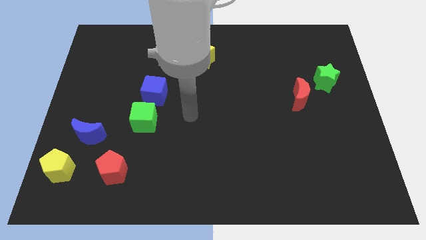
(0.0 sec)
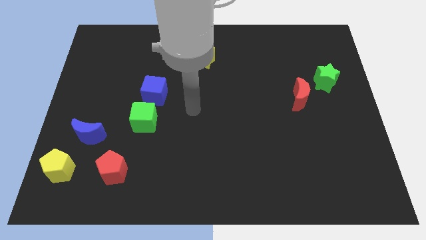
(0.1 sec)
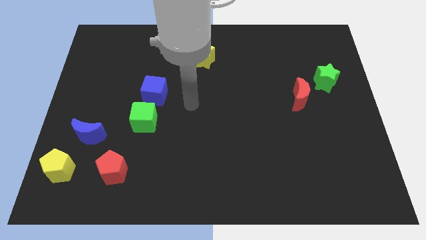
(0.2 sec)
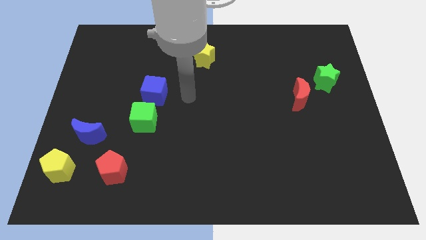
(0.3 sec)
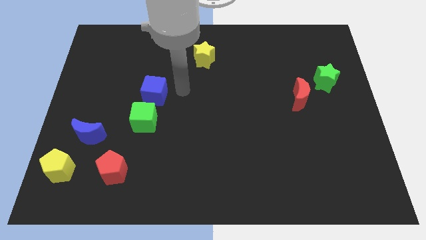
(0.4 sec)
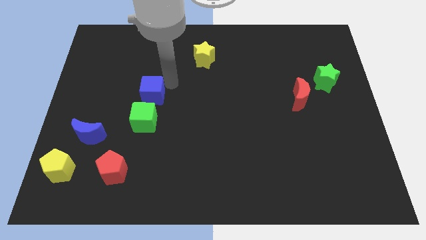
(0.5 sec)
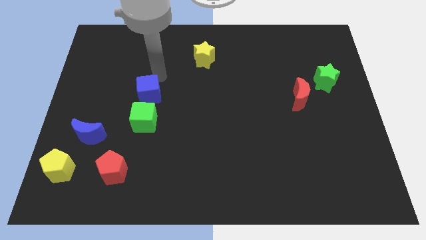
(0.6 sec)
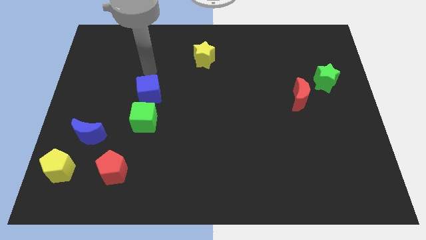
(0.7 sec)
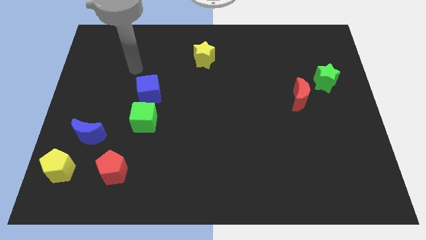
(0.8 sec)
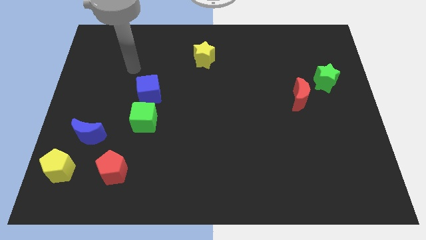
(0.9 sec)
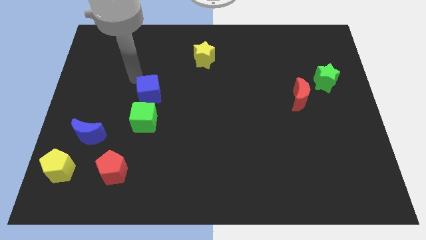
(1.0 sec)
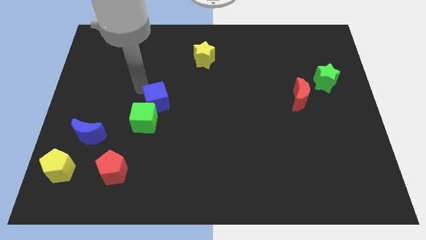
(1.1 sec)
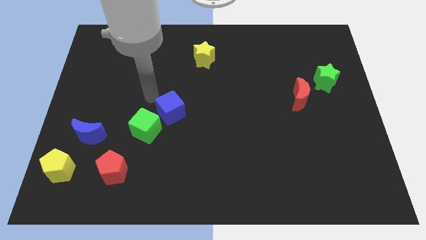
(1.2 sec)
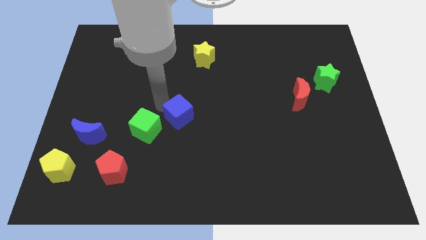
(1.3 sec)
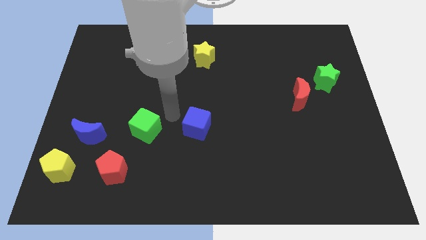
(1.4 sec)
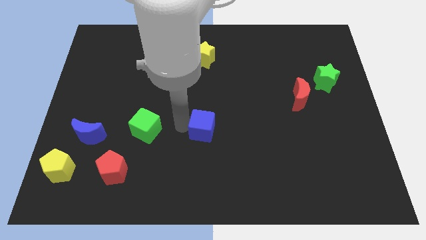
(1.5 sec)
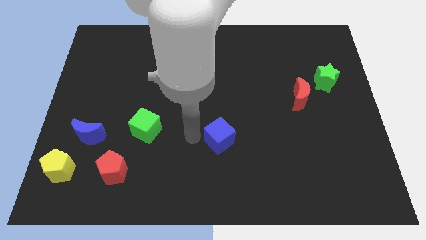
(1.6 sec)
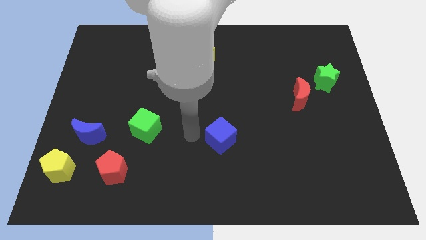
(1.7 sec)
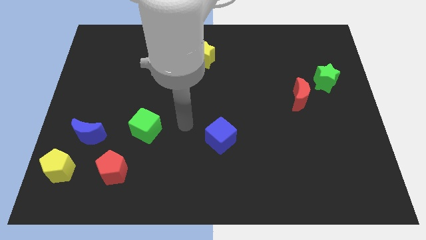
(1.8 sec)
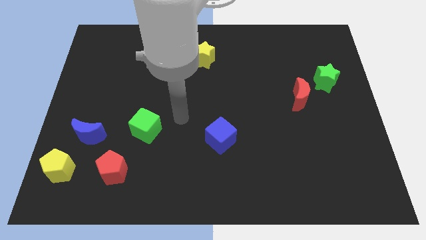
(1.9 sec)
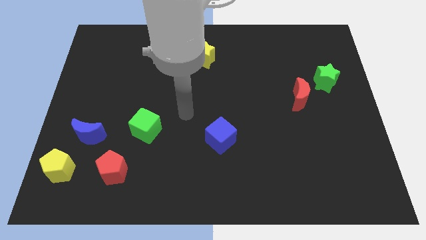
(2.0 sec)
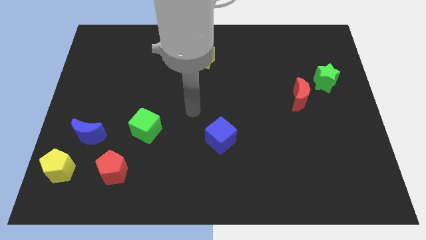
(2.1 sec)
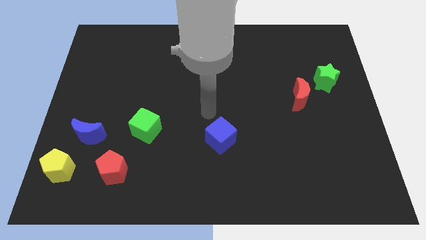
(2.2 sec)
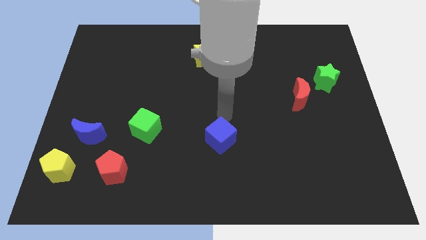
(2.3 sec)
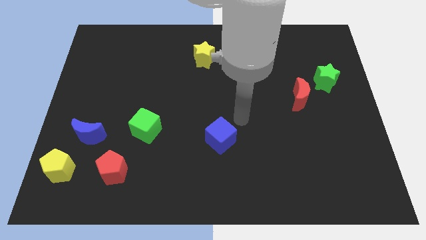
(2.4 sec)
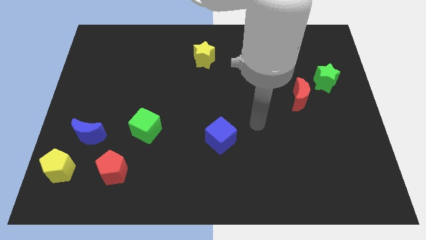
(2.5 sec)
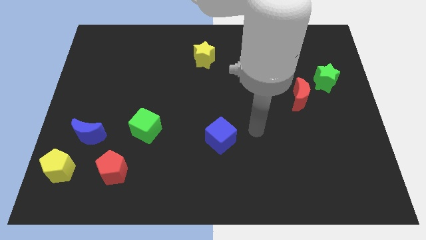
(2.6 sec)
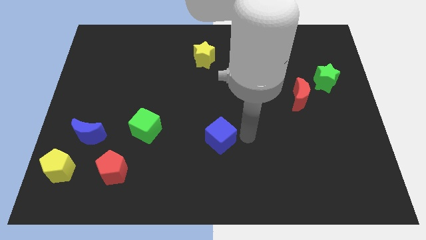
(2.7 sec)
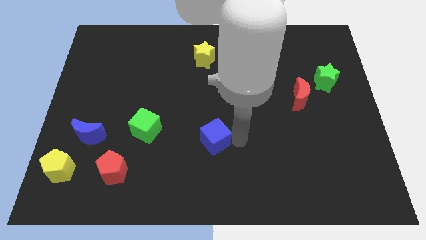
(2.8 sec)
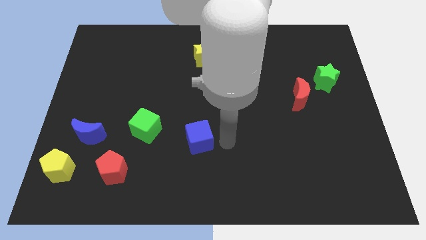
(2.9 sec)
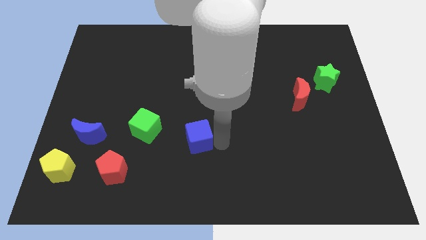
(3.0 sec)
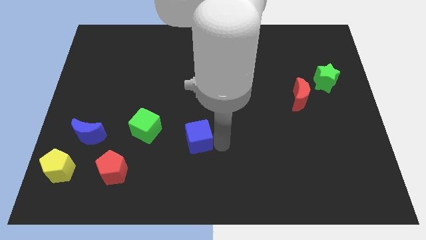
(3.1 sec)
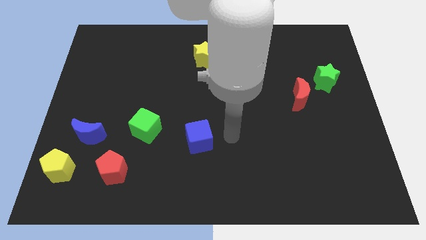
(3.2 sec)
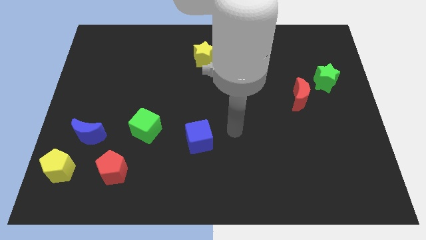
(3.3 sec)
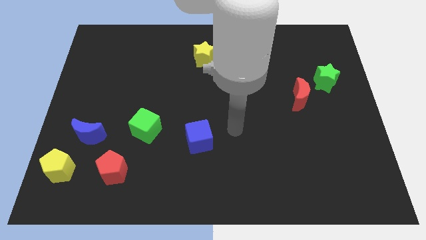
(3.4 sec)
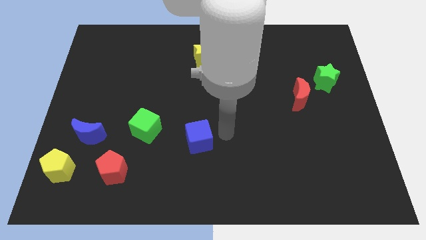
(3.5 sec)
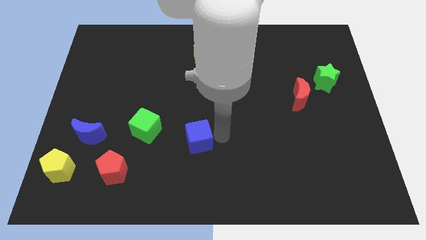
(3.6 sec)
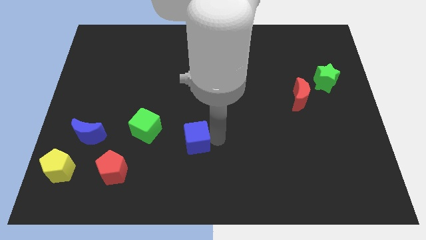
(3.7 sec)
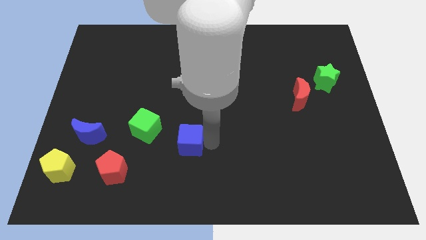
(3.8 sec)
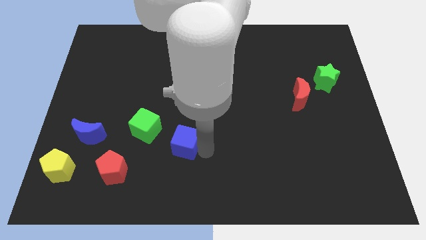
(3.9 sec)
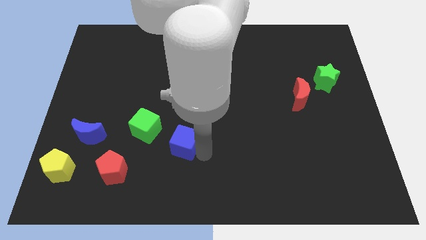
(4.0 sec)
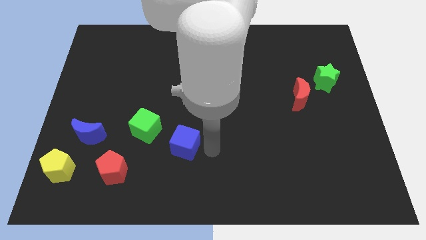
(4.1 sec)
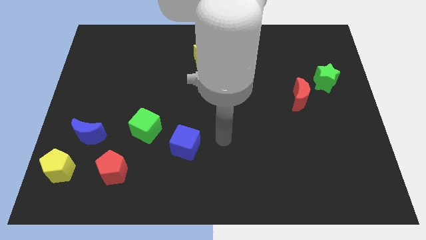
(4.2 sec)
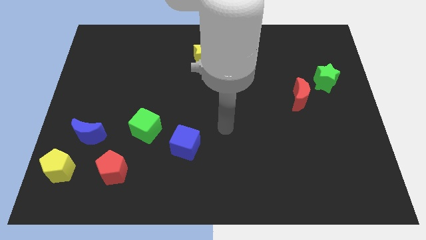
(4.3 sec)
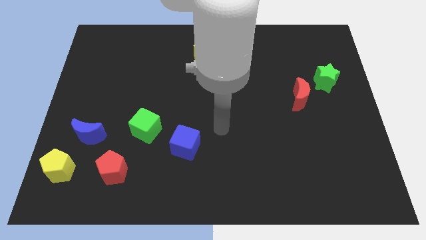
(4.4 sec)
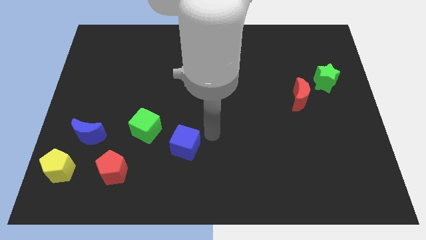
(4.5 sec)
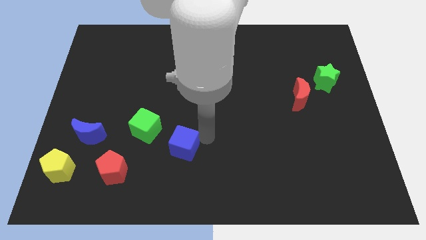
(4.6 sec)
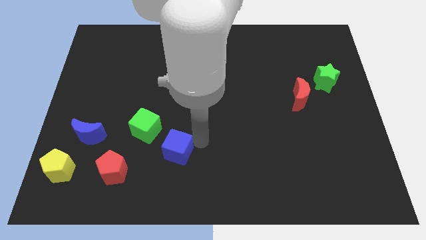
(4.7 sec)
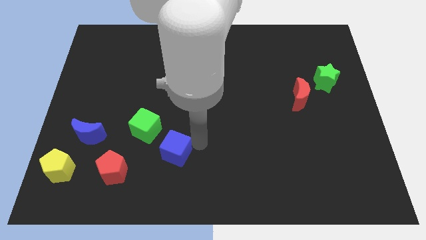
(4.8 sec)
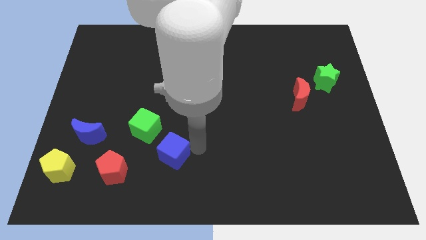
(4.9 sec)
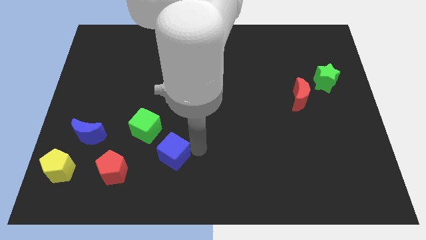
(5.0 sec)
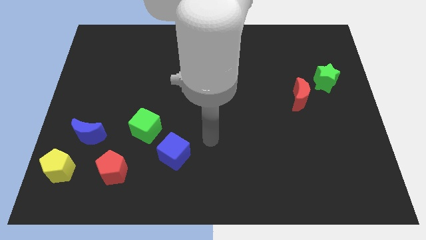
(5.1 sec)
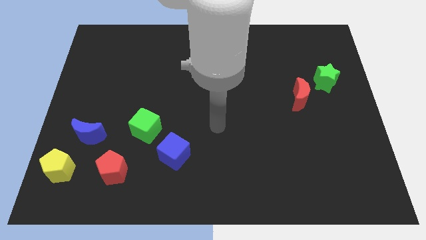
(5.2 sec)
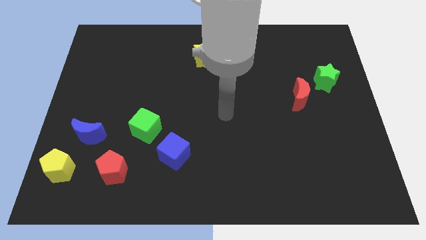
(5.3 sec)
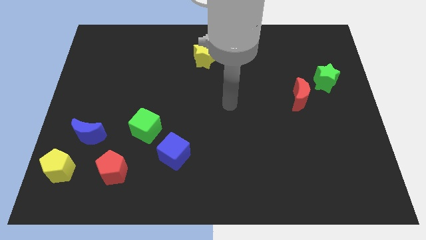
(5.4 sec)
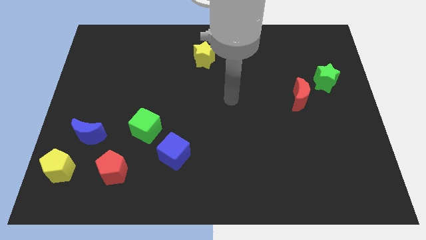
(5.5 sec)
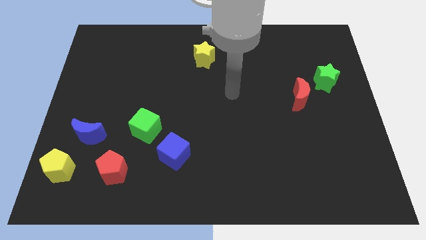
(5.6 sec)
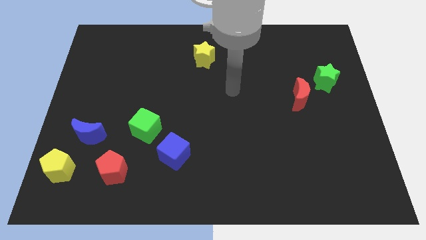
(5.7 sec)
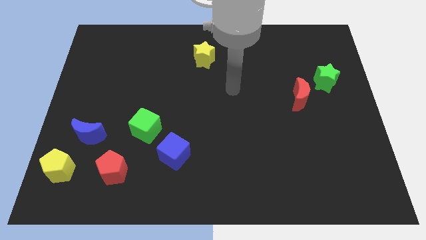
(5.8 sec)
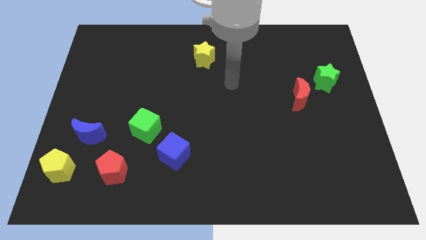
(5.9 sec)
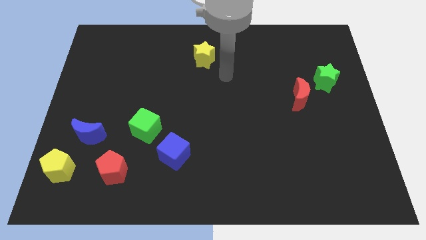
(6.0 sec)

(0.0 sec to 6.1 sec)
push the blue cube close to the red pentagon

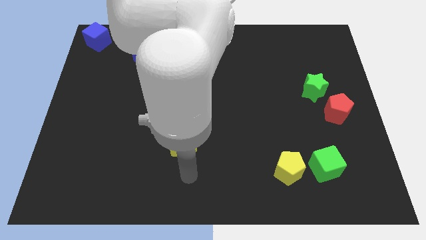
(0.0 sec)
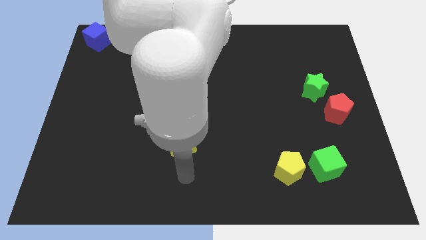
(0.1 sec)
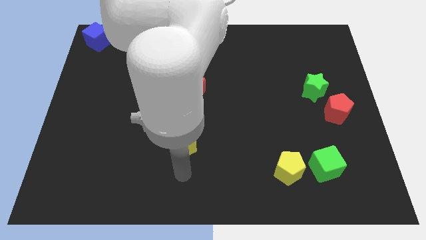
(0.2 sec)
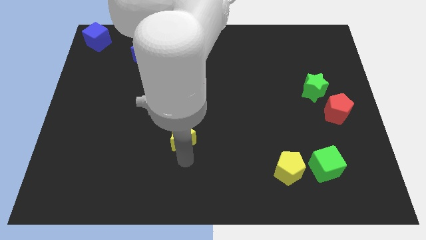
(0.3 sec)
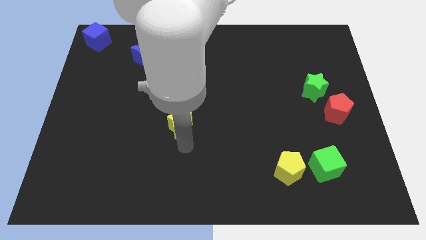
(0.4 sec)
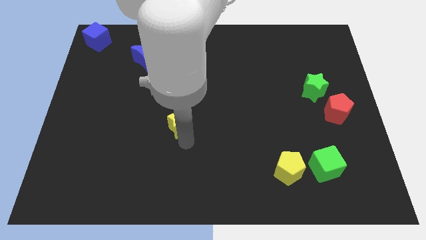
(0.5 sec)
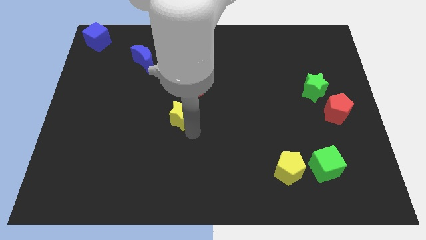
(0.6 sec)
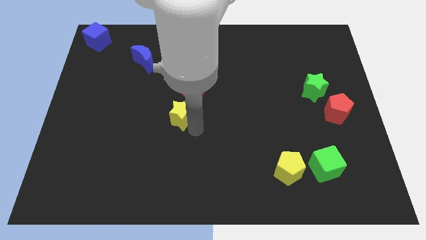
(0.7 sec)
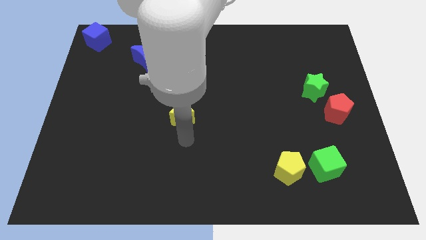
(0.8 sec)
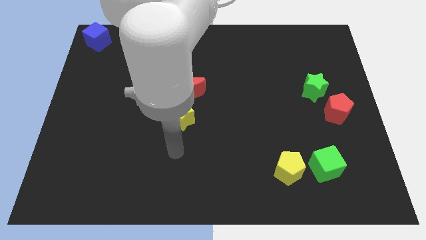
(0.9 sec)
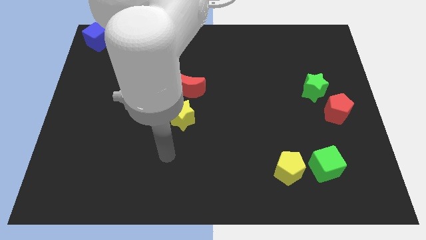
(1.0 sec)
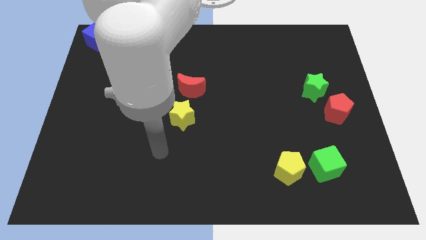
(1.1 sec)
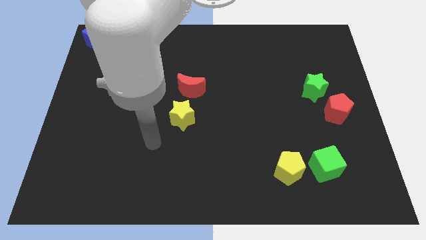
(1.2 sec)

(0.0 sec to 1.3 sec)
push the yellow star towards red crescent

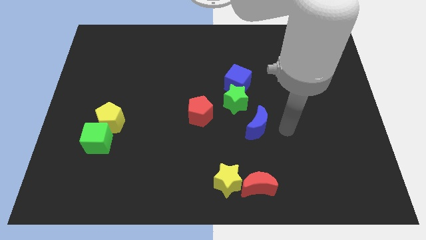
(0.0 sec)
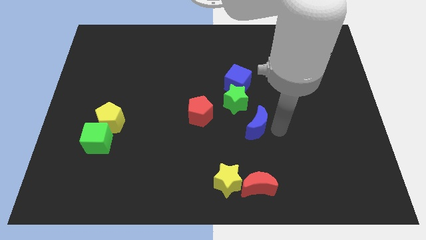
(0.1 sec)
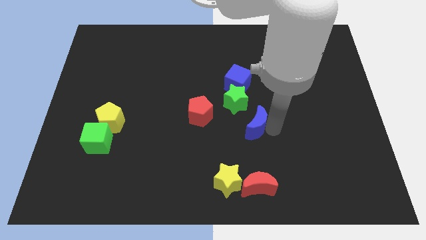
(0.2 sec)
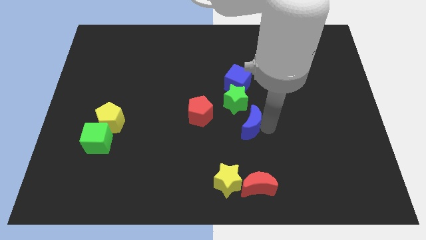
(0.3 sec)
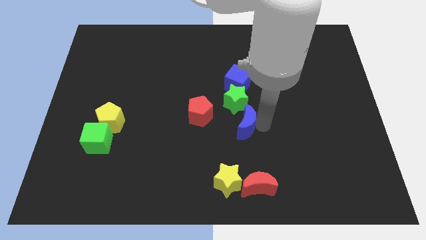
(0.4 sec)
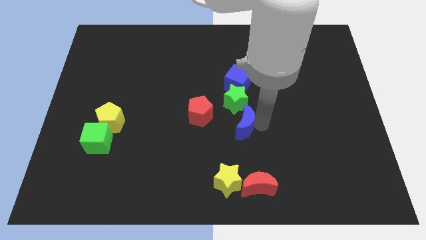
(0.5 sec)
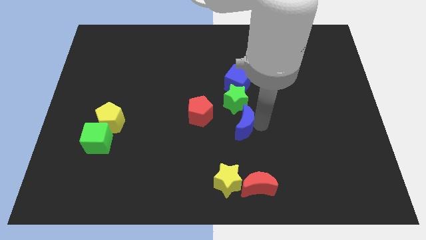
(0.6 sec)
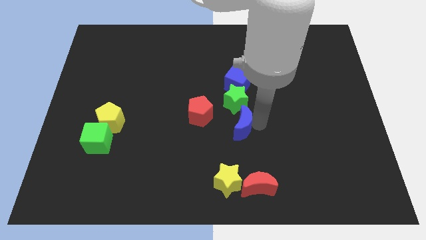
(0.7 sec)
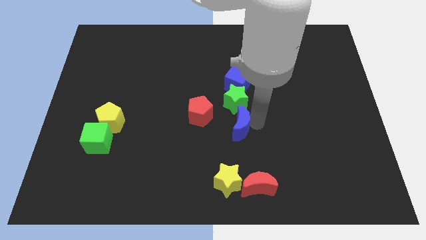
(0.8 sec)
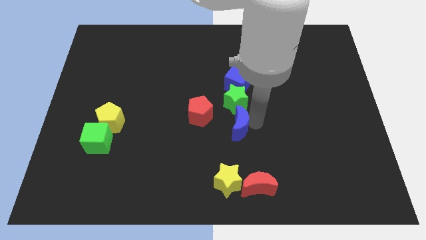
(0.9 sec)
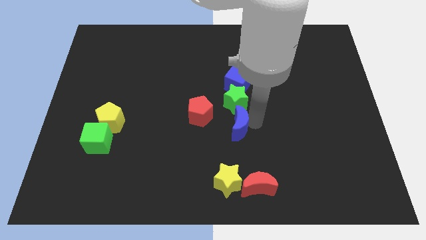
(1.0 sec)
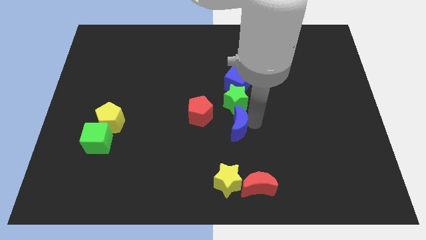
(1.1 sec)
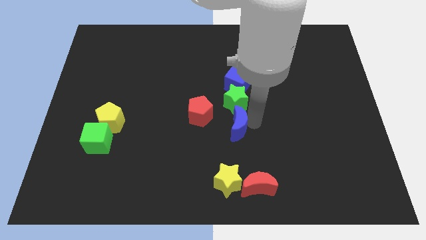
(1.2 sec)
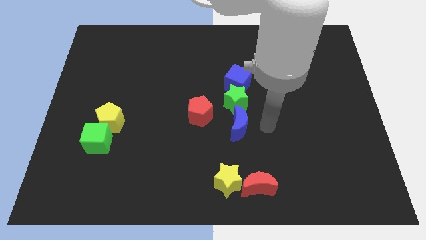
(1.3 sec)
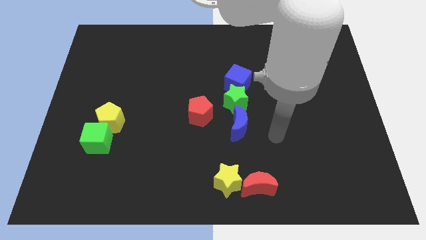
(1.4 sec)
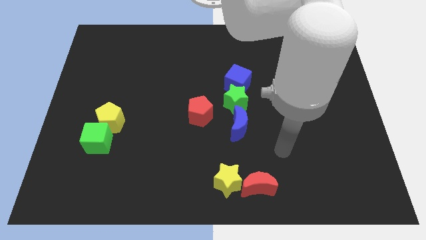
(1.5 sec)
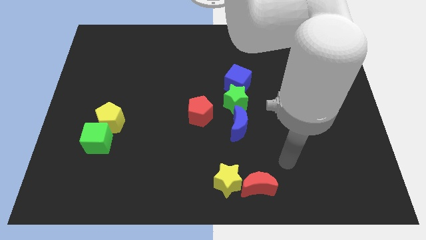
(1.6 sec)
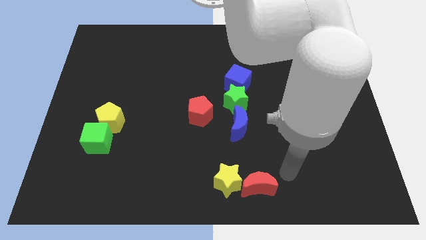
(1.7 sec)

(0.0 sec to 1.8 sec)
push the blue crescent below the green star
